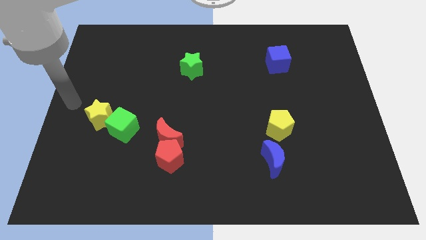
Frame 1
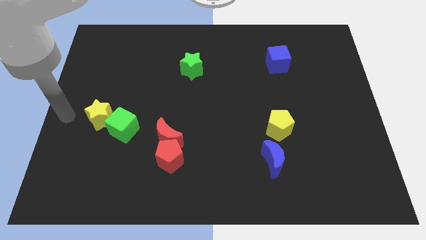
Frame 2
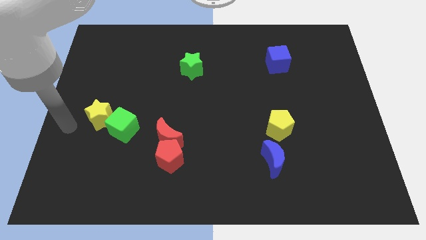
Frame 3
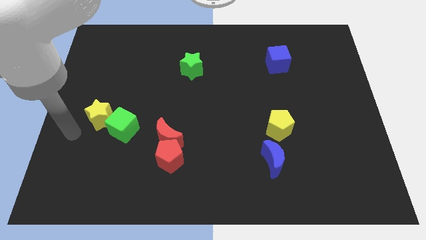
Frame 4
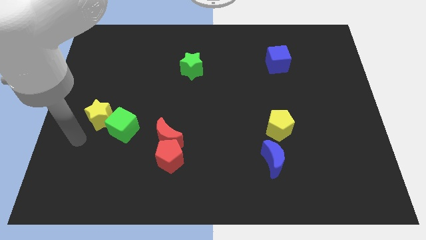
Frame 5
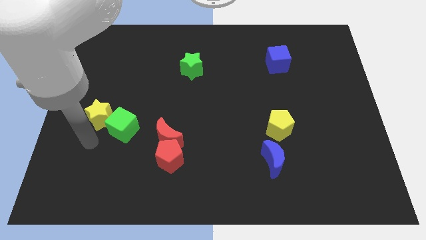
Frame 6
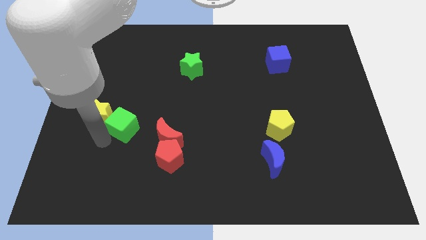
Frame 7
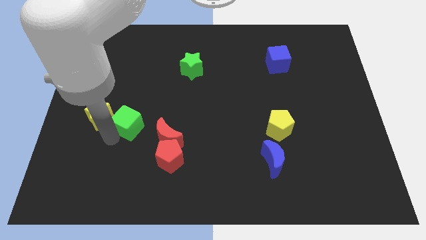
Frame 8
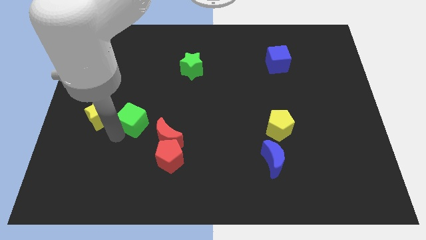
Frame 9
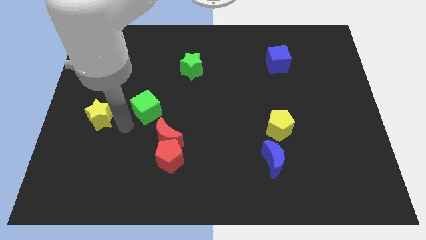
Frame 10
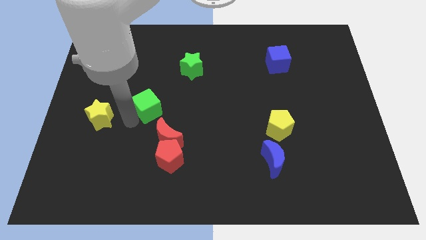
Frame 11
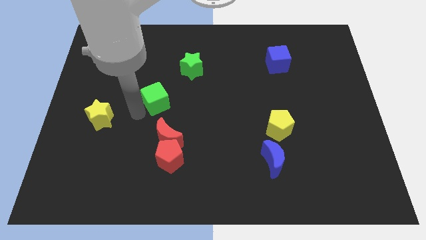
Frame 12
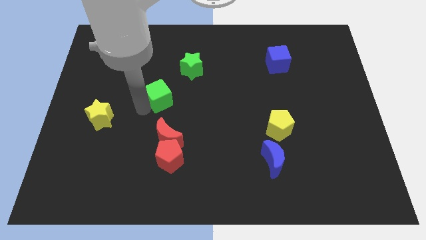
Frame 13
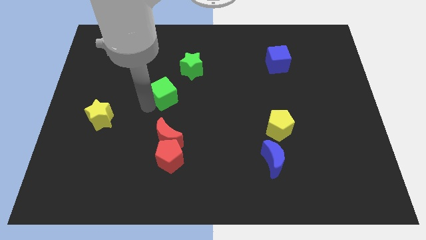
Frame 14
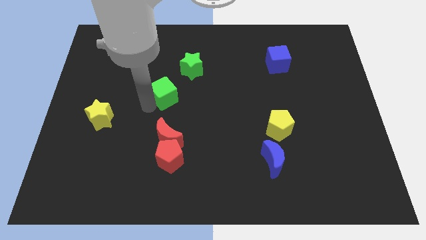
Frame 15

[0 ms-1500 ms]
place the green cube diagonally to green star

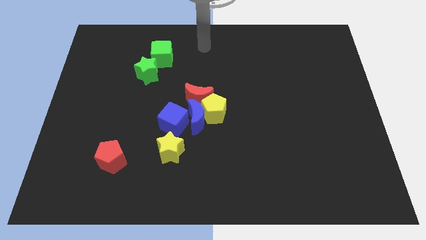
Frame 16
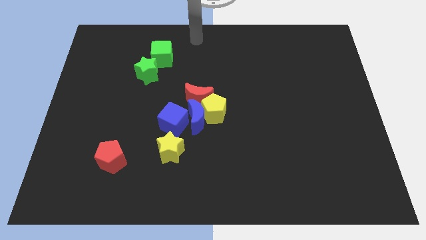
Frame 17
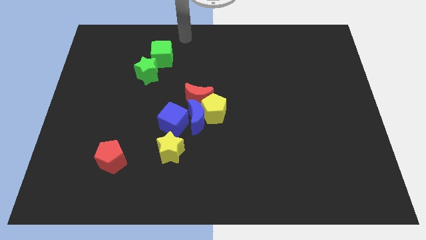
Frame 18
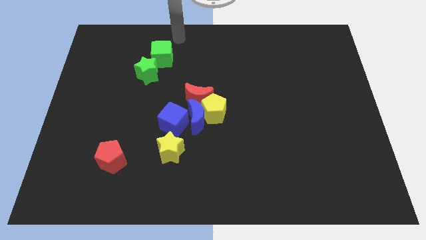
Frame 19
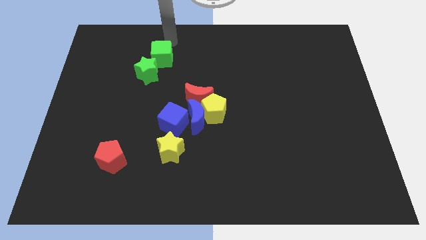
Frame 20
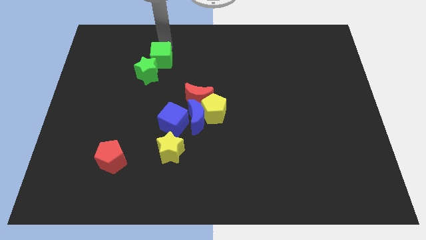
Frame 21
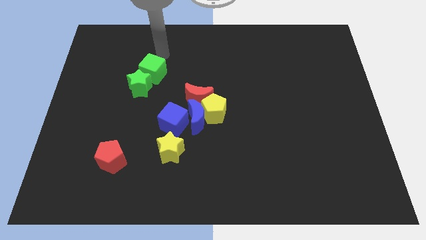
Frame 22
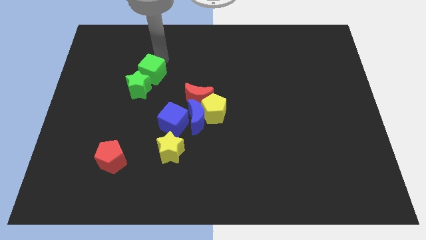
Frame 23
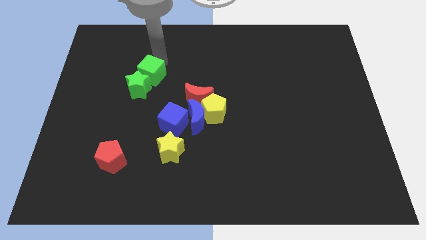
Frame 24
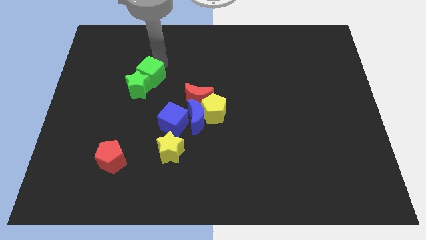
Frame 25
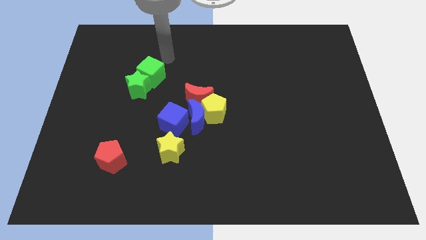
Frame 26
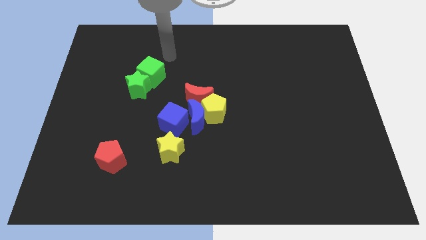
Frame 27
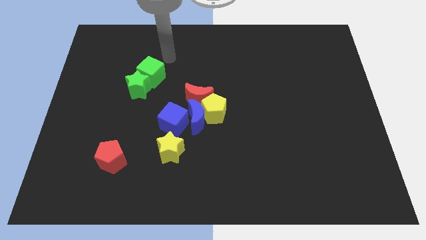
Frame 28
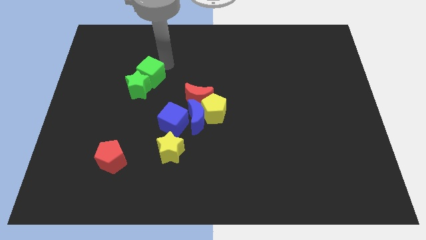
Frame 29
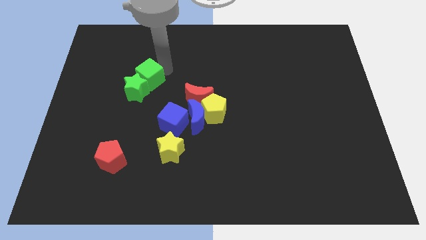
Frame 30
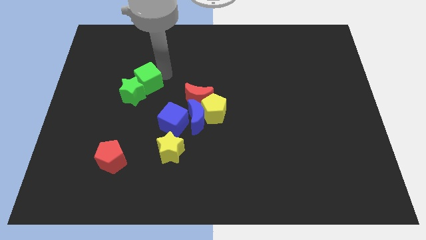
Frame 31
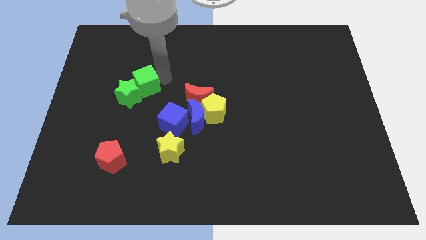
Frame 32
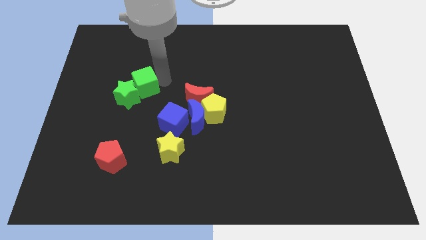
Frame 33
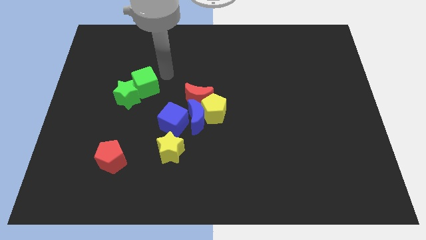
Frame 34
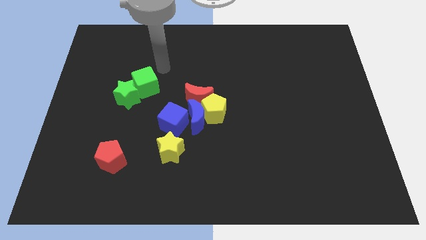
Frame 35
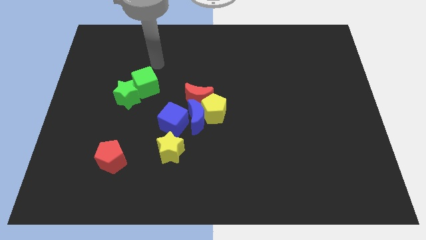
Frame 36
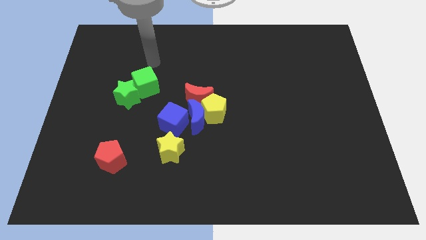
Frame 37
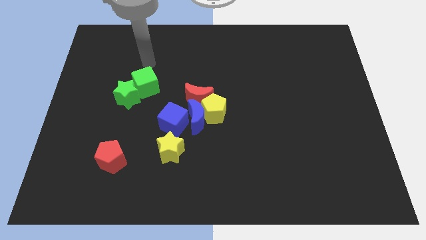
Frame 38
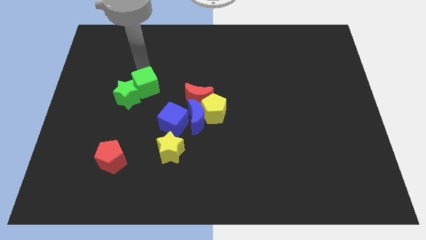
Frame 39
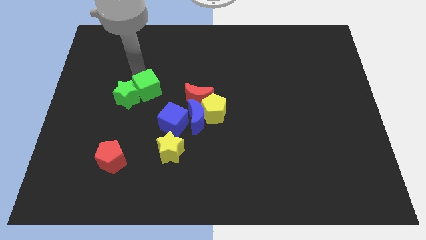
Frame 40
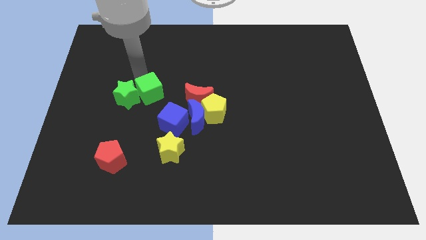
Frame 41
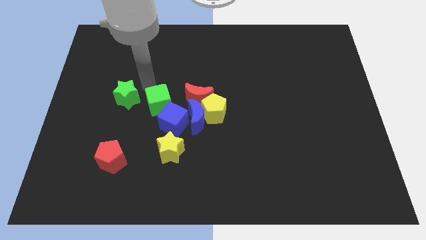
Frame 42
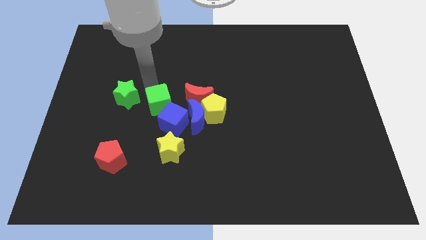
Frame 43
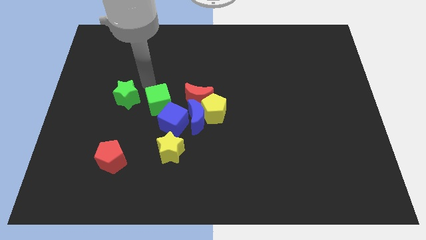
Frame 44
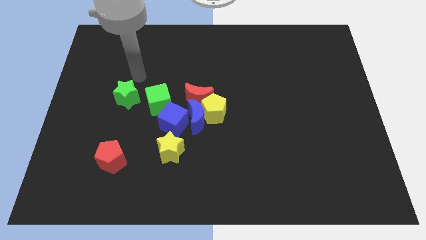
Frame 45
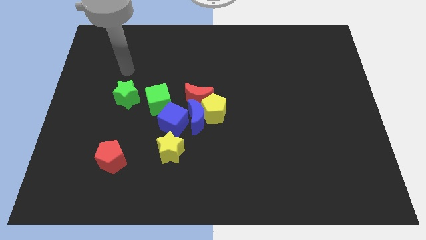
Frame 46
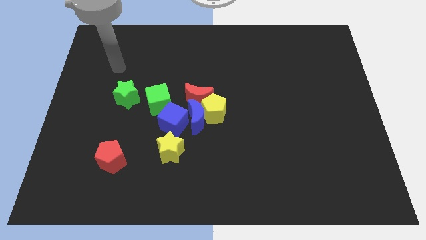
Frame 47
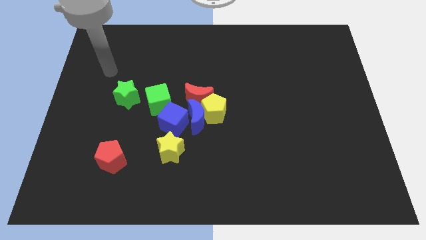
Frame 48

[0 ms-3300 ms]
move the green cube in between the green star and blue cube

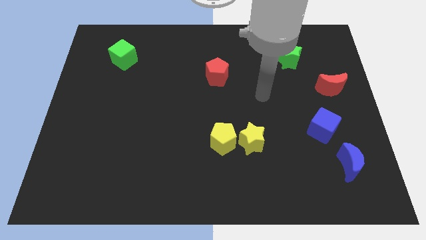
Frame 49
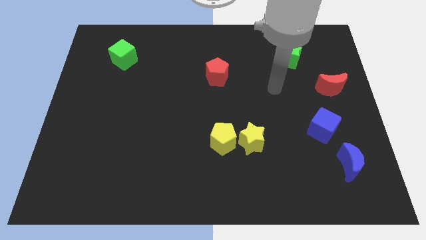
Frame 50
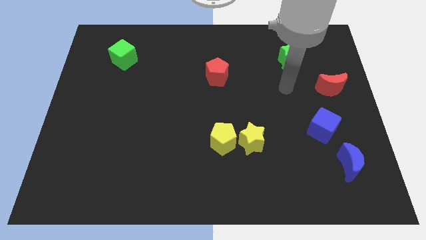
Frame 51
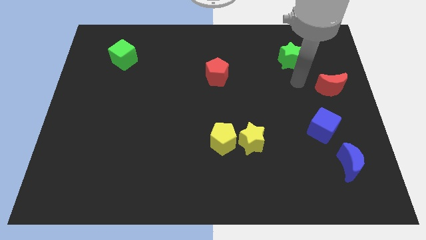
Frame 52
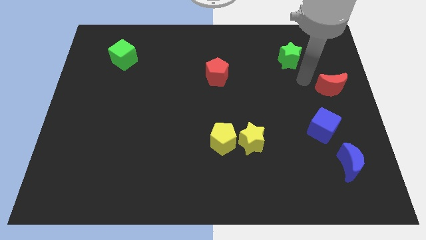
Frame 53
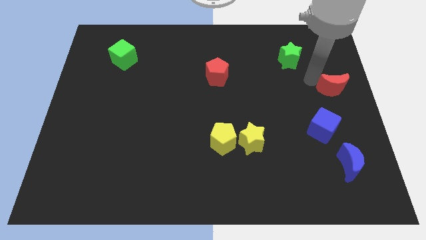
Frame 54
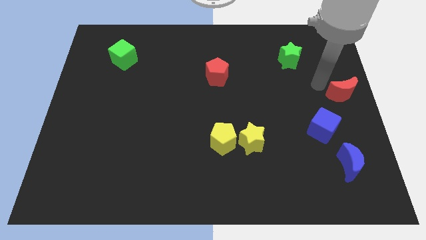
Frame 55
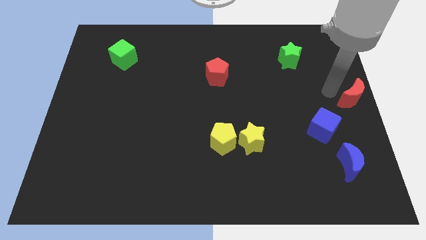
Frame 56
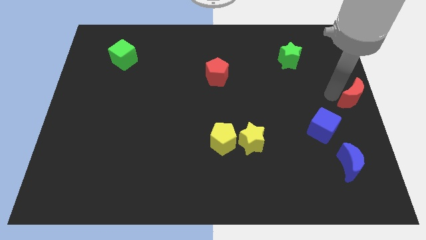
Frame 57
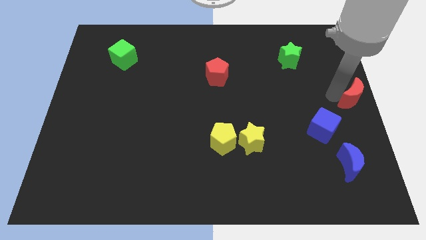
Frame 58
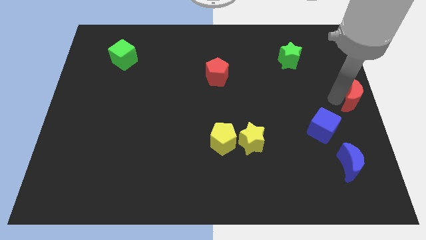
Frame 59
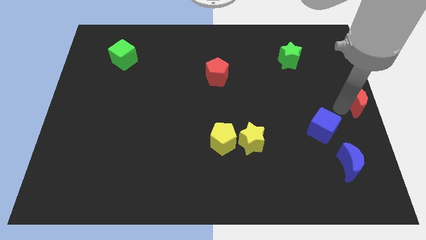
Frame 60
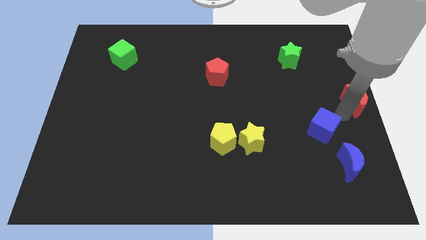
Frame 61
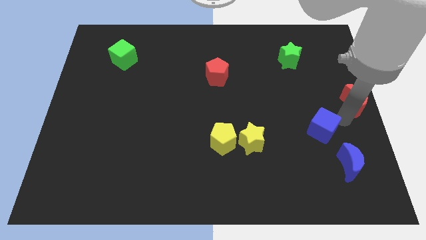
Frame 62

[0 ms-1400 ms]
place the red crescent at the right center of the board

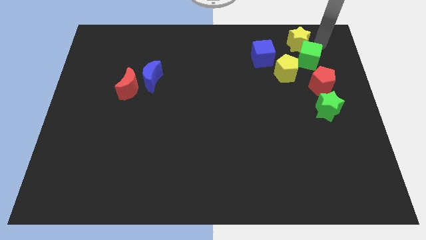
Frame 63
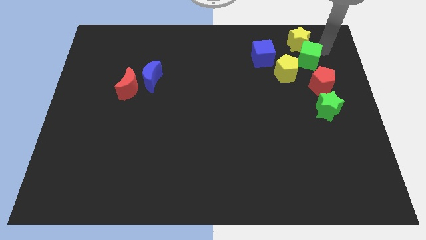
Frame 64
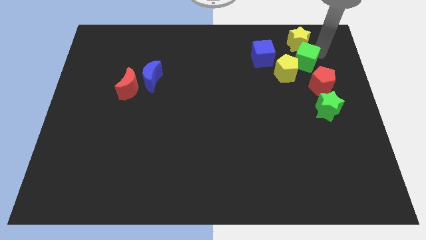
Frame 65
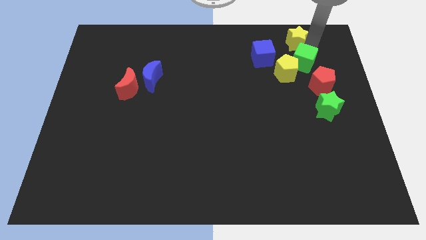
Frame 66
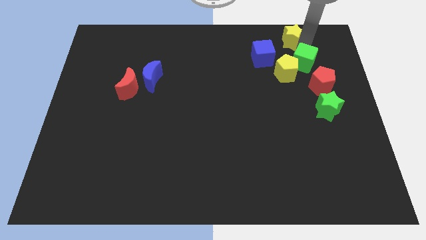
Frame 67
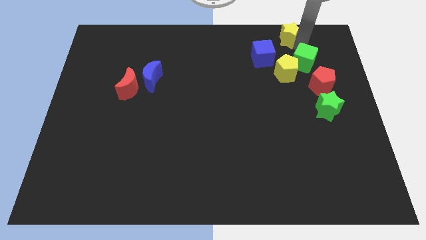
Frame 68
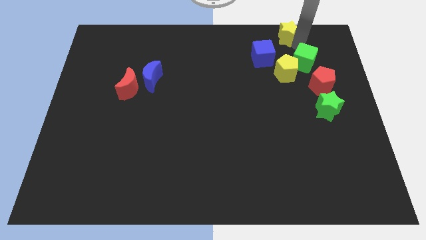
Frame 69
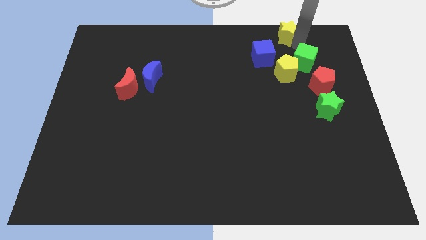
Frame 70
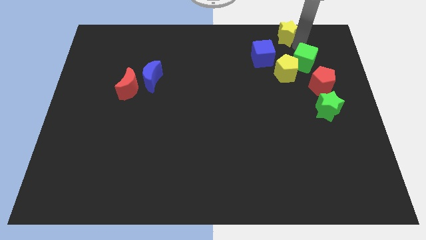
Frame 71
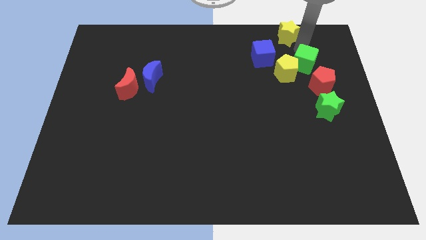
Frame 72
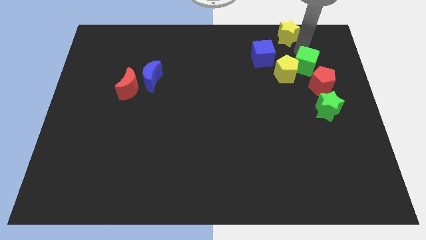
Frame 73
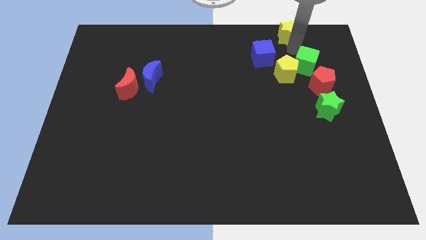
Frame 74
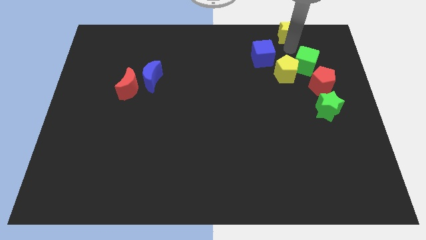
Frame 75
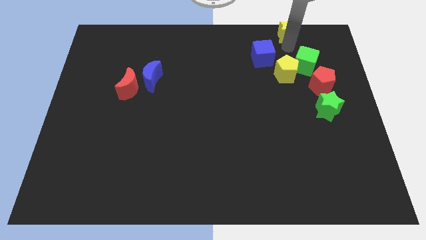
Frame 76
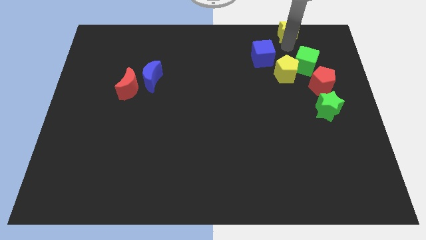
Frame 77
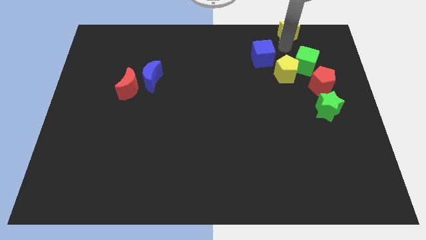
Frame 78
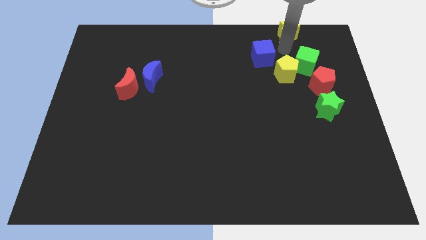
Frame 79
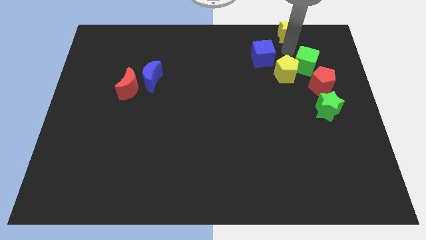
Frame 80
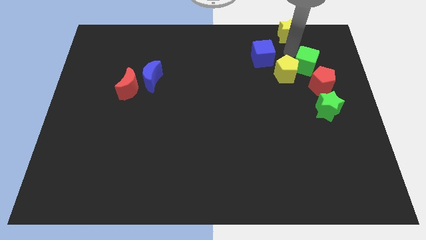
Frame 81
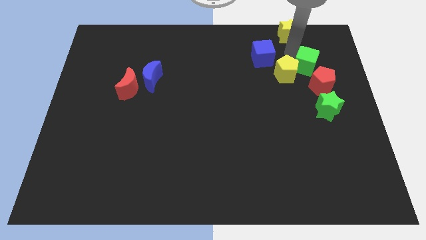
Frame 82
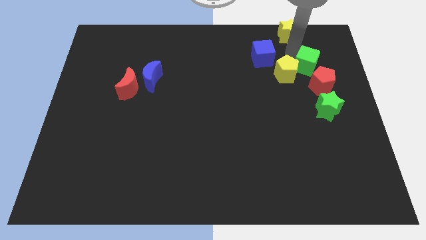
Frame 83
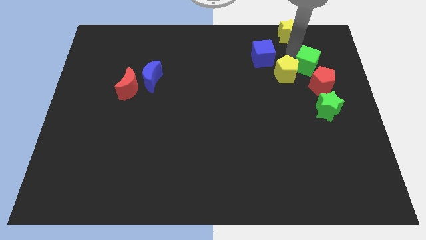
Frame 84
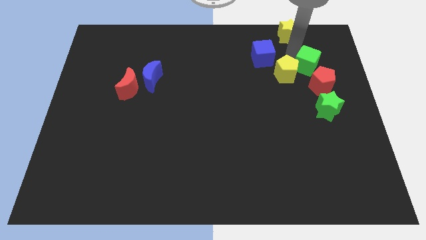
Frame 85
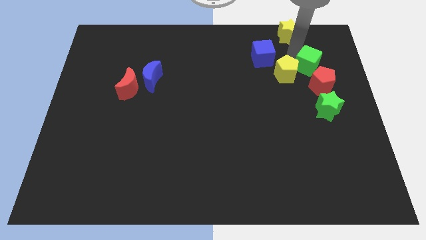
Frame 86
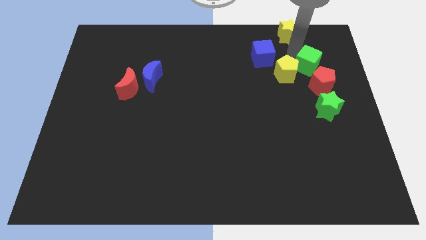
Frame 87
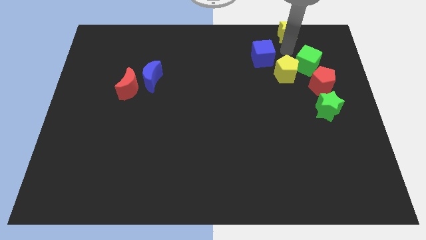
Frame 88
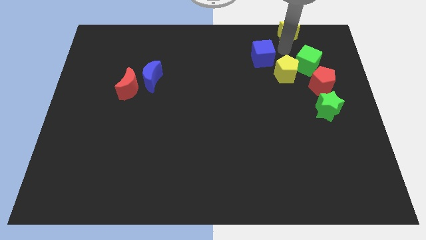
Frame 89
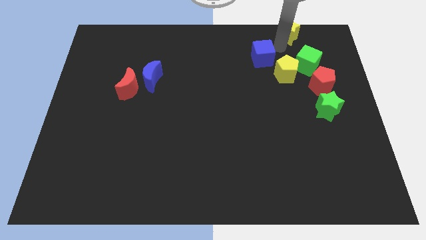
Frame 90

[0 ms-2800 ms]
separate the yellow star and green cube from each other
